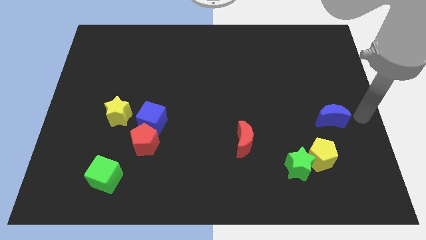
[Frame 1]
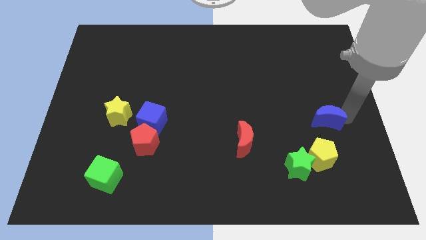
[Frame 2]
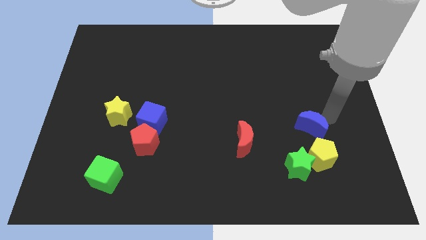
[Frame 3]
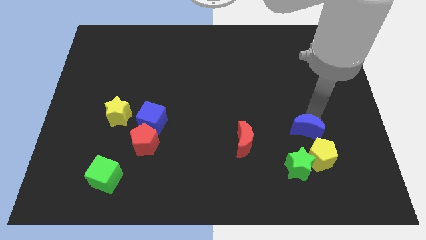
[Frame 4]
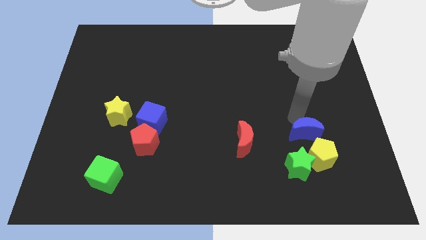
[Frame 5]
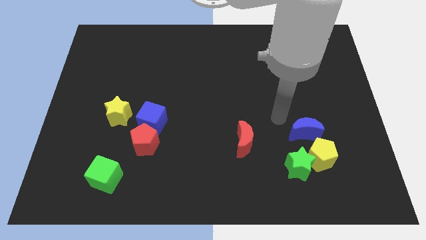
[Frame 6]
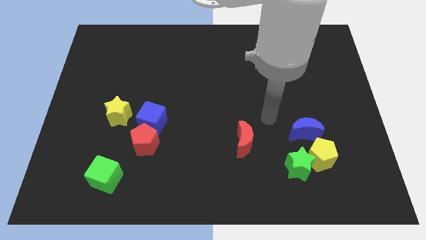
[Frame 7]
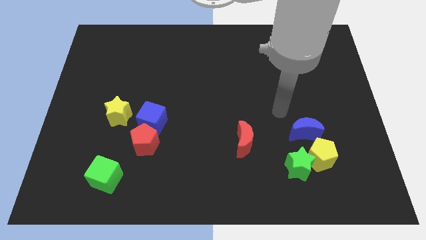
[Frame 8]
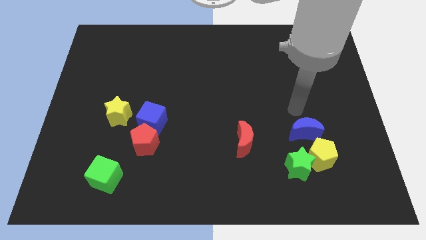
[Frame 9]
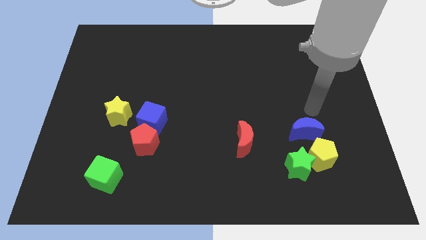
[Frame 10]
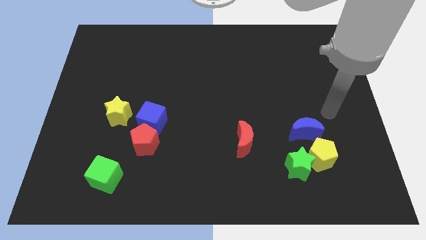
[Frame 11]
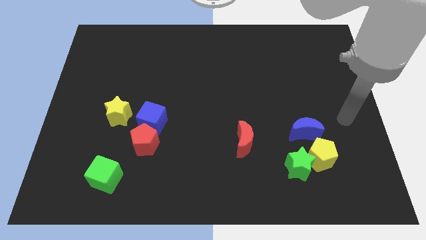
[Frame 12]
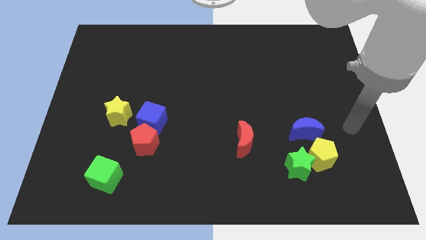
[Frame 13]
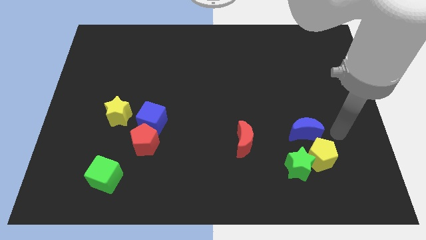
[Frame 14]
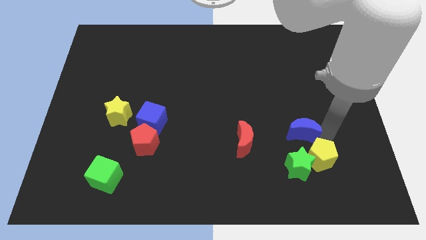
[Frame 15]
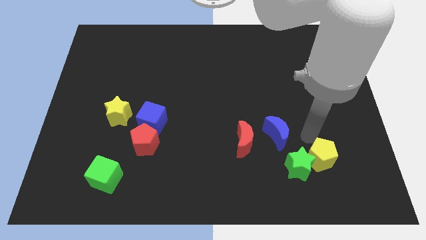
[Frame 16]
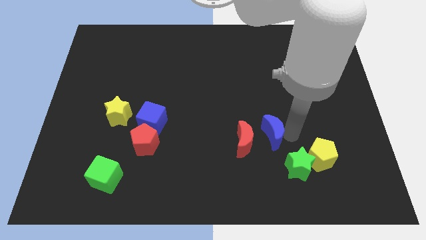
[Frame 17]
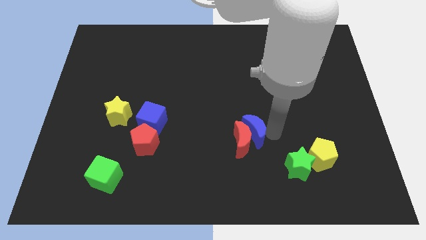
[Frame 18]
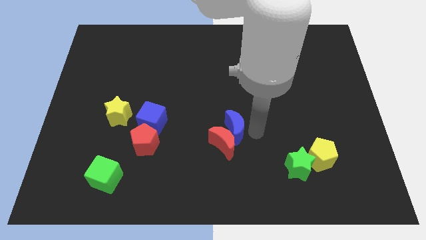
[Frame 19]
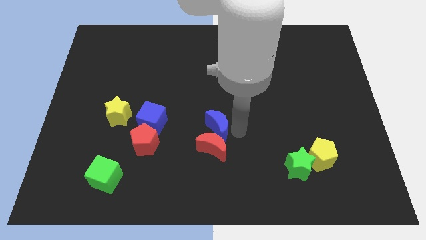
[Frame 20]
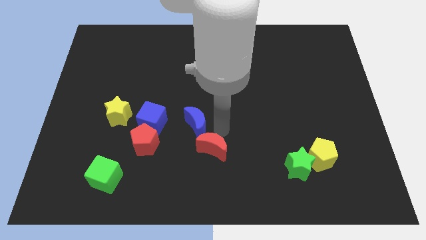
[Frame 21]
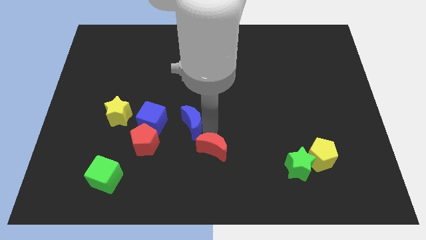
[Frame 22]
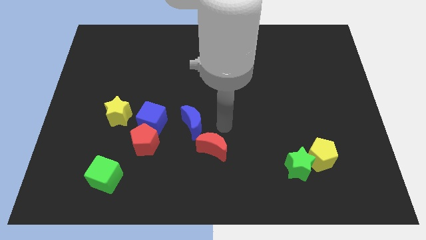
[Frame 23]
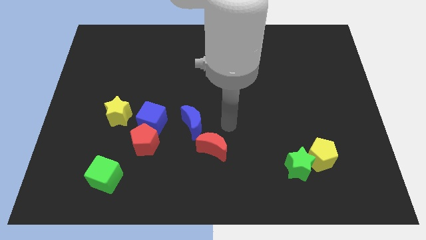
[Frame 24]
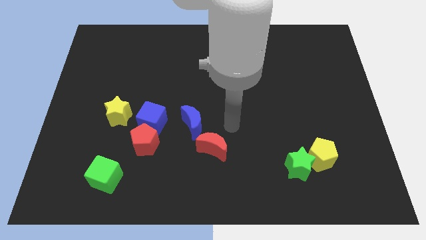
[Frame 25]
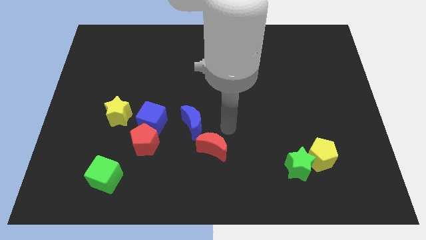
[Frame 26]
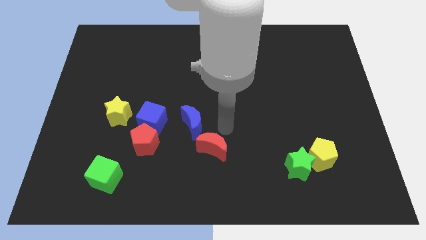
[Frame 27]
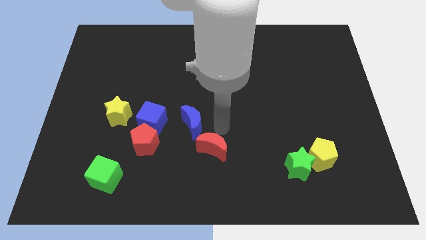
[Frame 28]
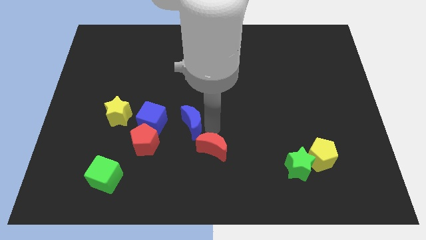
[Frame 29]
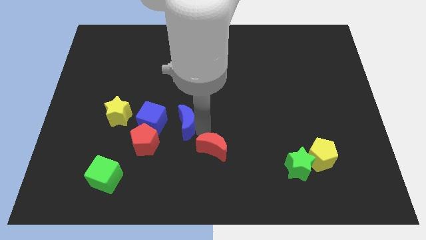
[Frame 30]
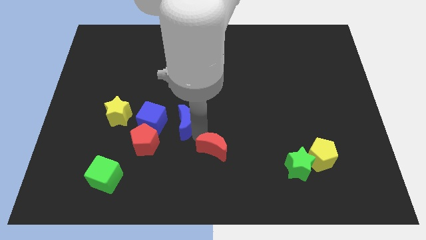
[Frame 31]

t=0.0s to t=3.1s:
move blue crescent towards the blue cube

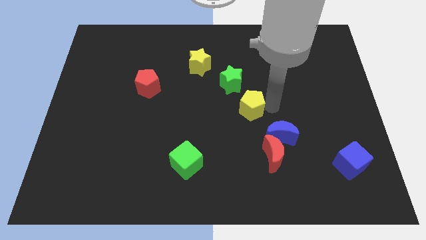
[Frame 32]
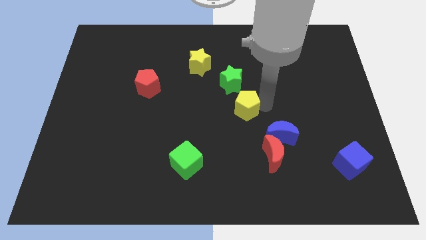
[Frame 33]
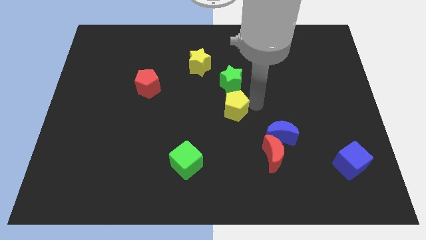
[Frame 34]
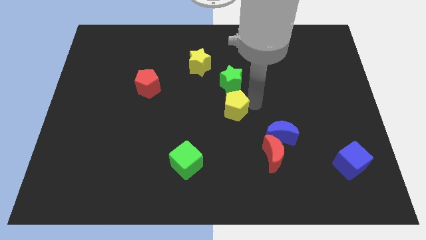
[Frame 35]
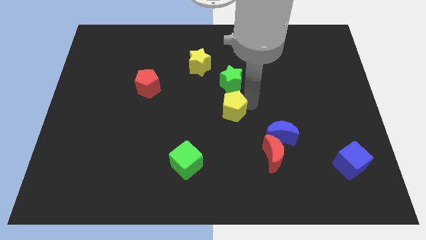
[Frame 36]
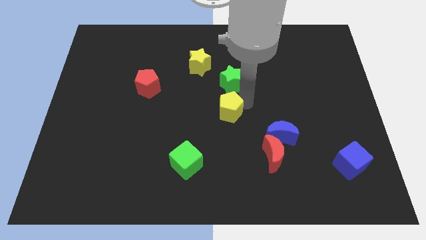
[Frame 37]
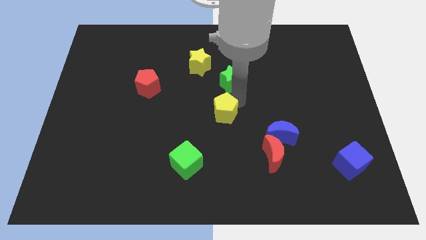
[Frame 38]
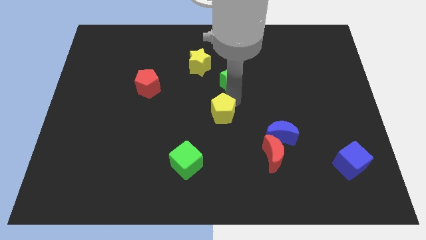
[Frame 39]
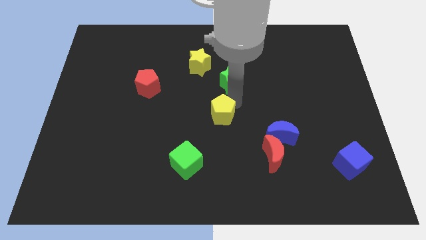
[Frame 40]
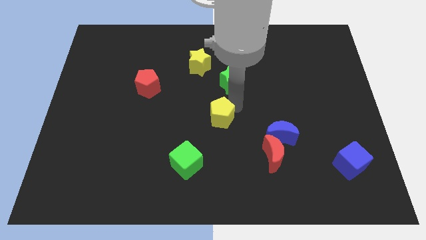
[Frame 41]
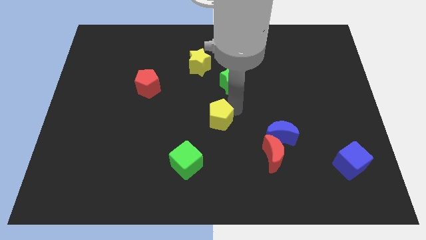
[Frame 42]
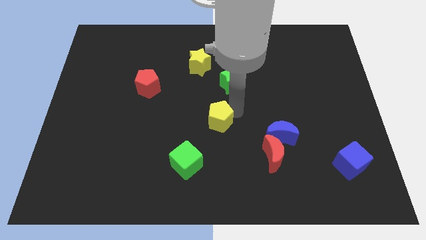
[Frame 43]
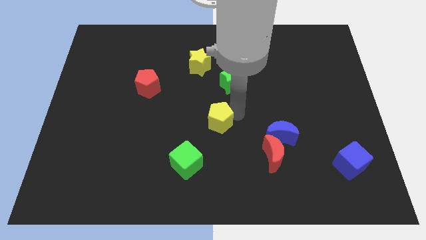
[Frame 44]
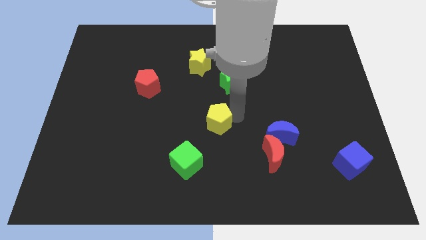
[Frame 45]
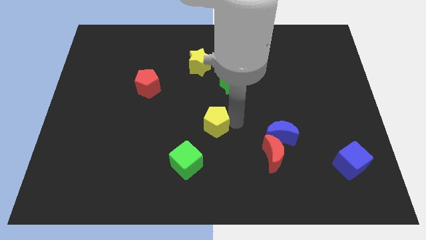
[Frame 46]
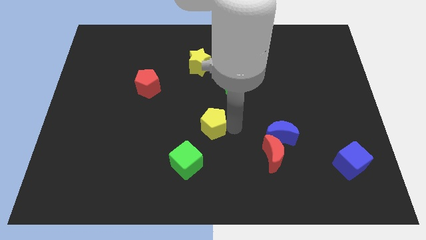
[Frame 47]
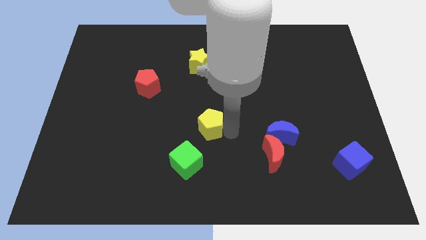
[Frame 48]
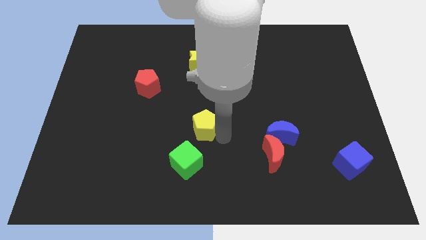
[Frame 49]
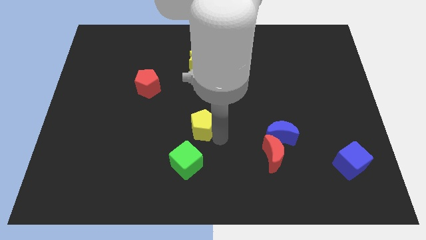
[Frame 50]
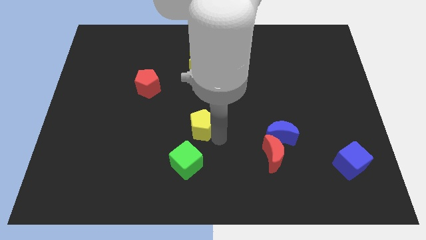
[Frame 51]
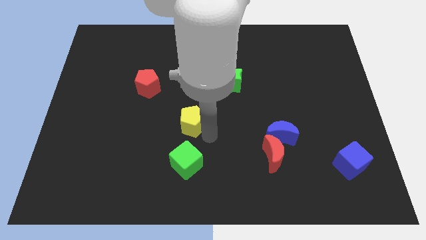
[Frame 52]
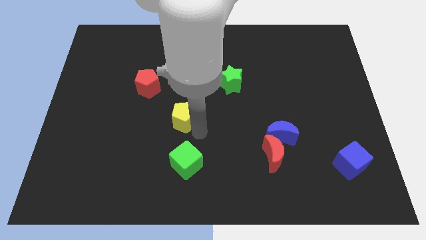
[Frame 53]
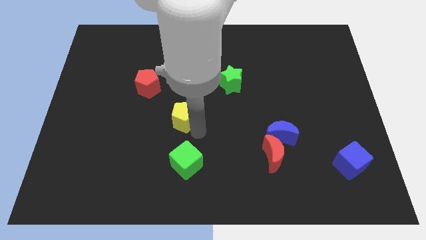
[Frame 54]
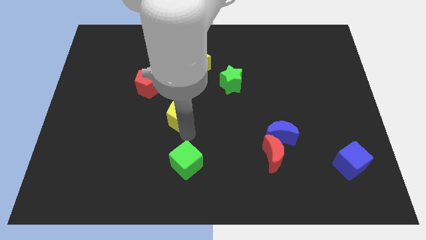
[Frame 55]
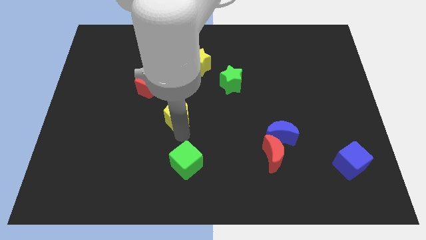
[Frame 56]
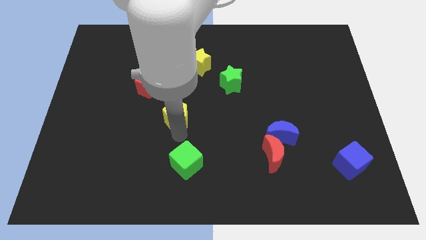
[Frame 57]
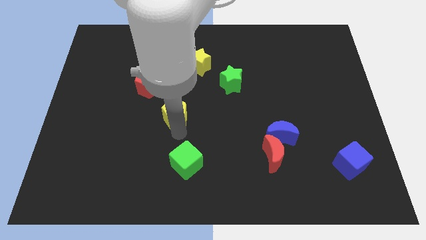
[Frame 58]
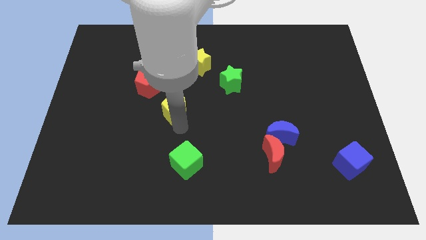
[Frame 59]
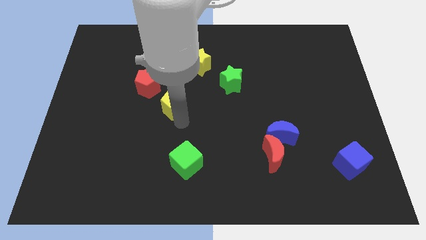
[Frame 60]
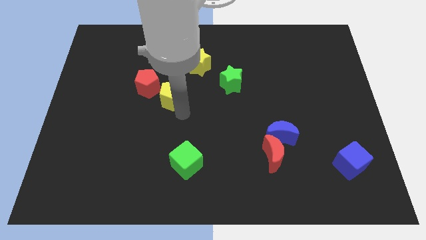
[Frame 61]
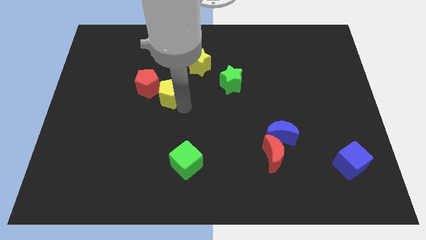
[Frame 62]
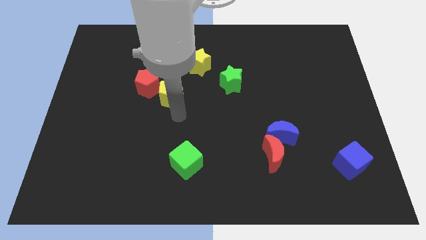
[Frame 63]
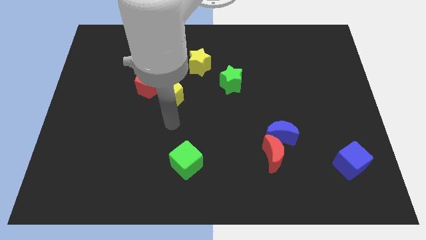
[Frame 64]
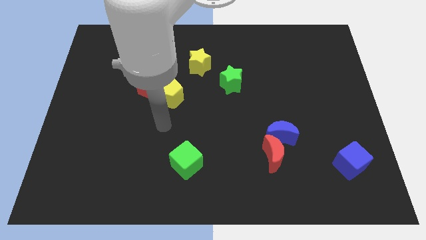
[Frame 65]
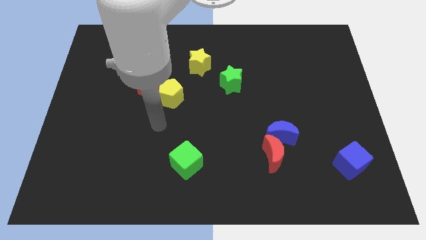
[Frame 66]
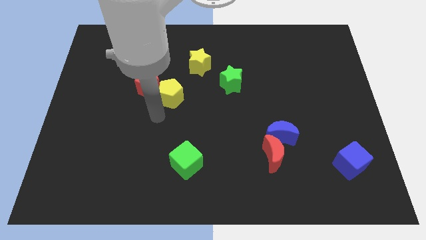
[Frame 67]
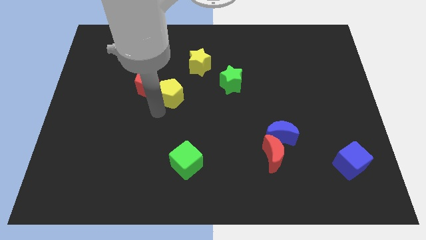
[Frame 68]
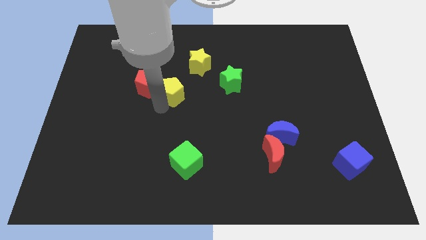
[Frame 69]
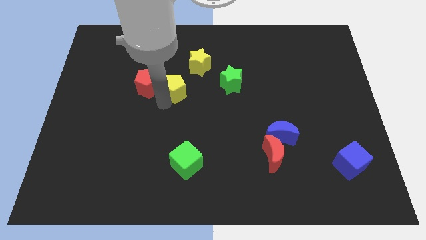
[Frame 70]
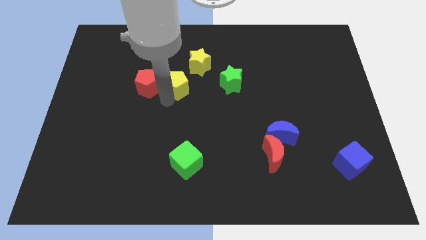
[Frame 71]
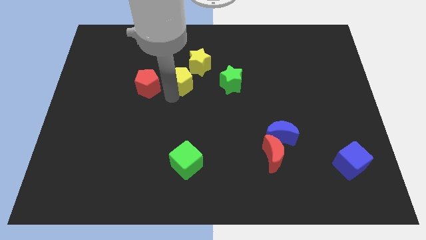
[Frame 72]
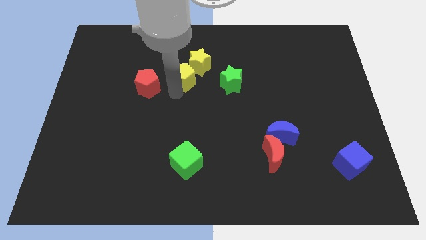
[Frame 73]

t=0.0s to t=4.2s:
place yellow pentagon to the right of red pentagon

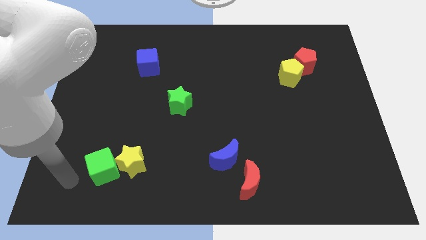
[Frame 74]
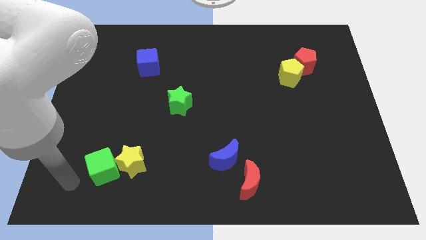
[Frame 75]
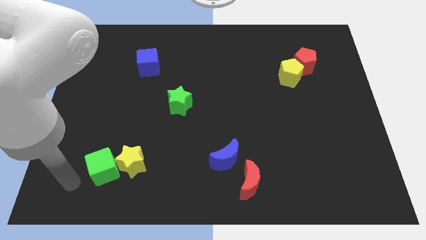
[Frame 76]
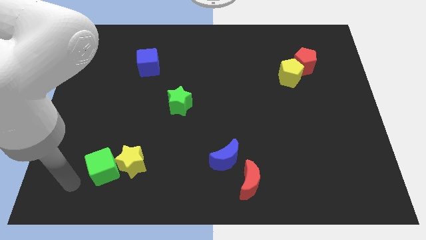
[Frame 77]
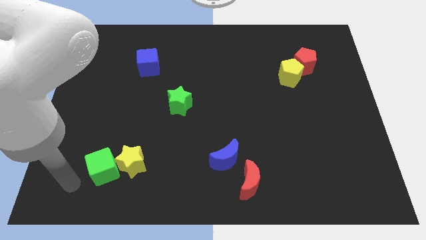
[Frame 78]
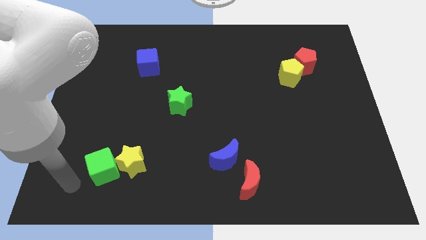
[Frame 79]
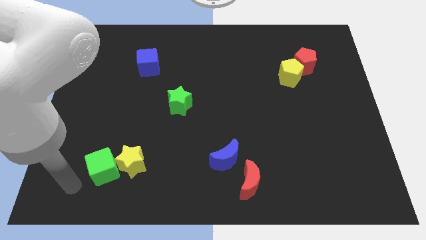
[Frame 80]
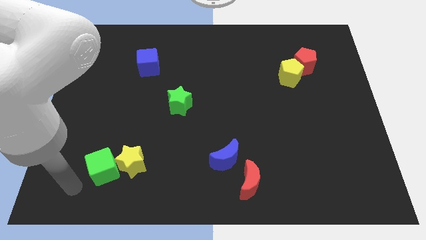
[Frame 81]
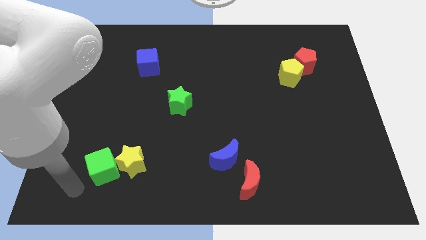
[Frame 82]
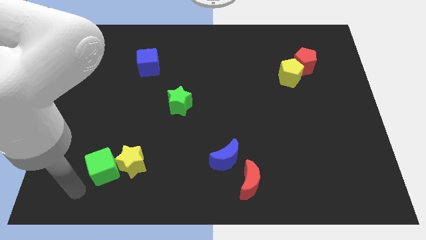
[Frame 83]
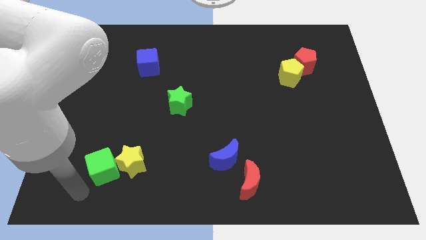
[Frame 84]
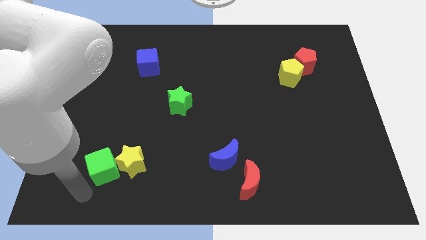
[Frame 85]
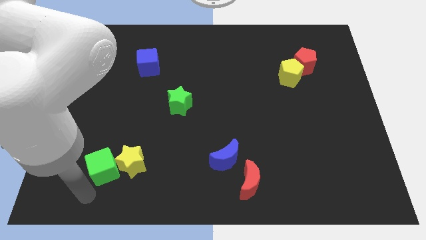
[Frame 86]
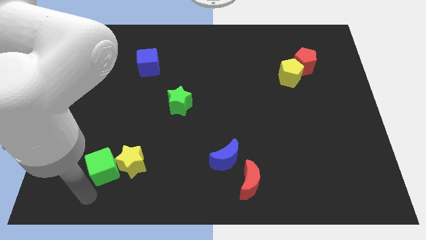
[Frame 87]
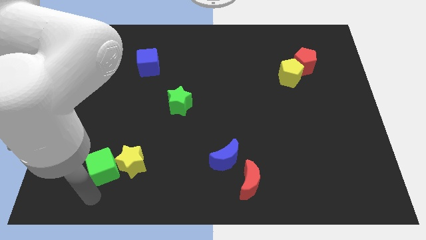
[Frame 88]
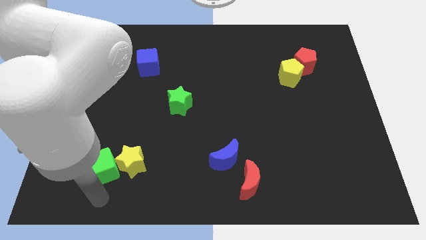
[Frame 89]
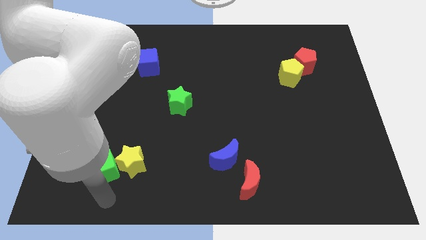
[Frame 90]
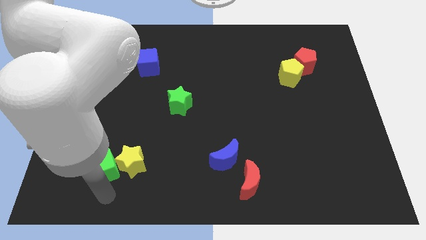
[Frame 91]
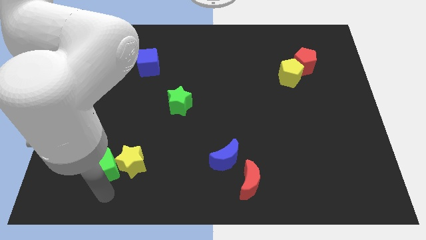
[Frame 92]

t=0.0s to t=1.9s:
move your arm to the bottom of green cube
